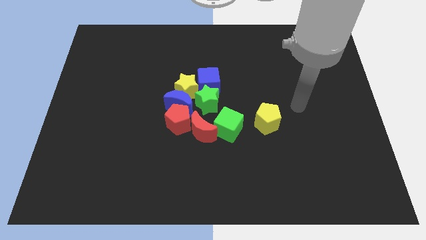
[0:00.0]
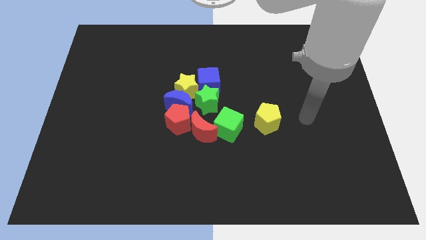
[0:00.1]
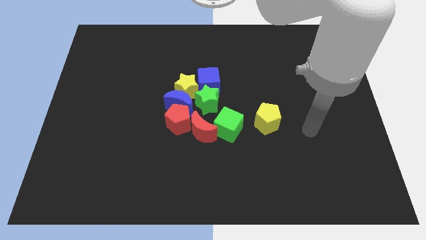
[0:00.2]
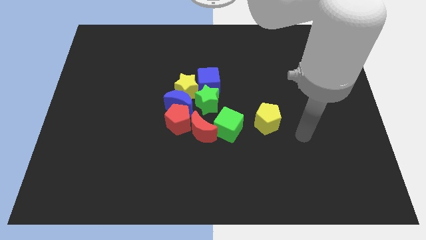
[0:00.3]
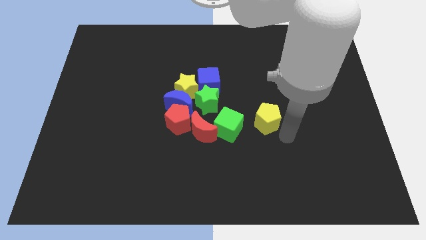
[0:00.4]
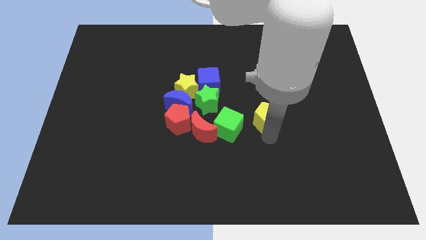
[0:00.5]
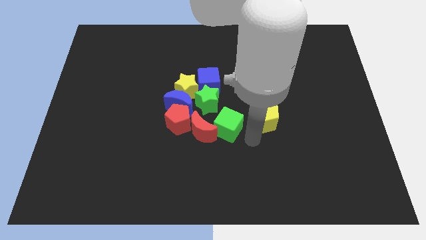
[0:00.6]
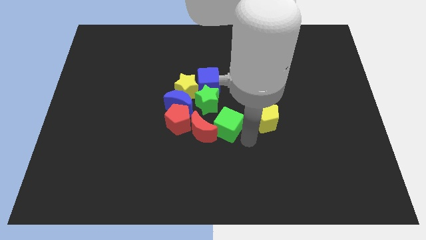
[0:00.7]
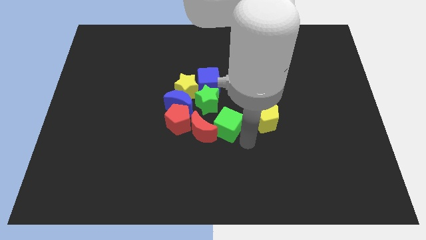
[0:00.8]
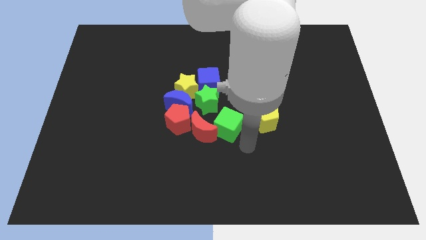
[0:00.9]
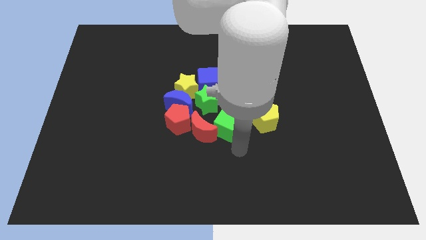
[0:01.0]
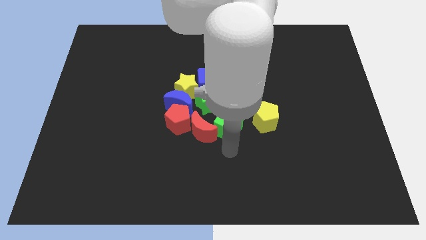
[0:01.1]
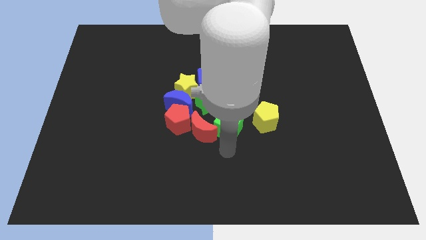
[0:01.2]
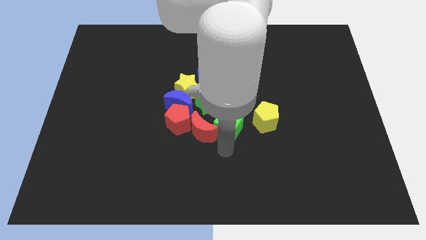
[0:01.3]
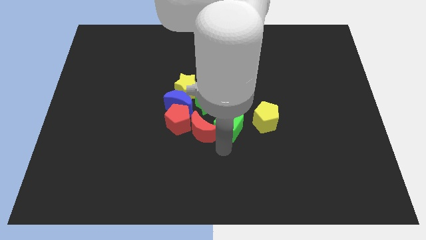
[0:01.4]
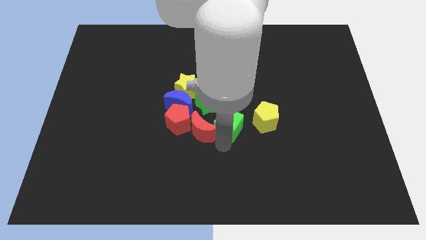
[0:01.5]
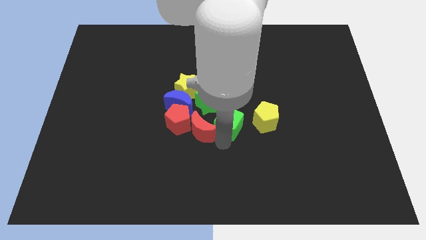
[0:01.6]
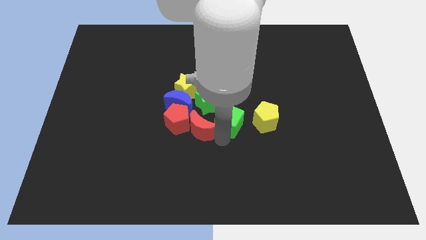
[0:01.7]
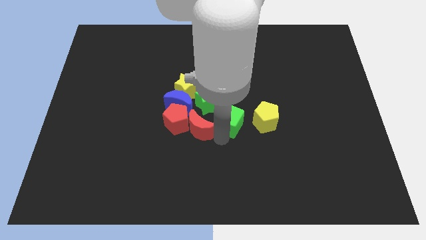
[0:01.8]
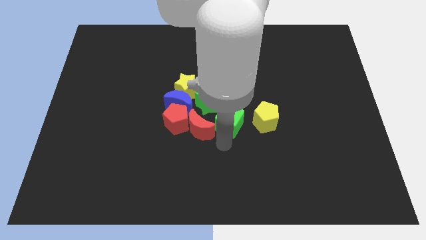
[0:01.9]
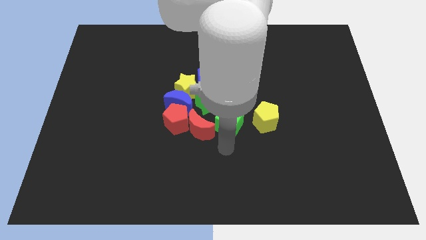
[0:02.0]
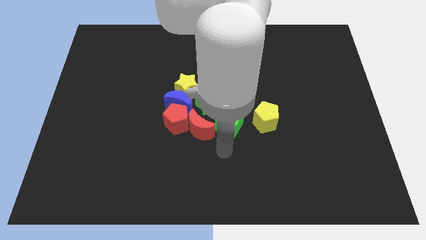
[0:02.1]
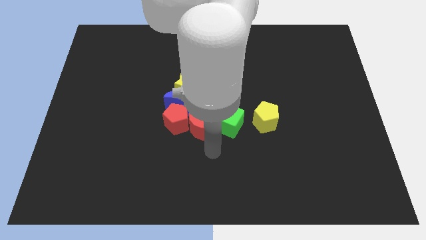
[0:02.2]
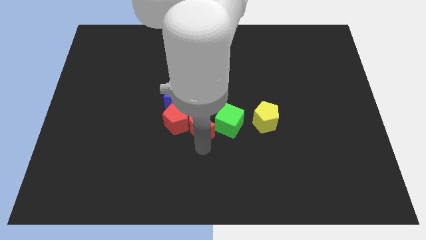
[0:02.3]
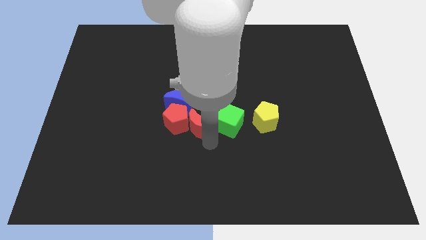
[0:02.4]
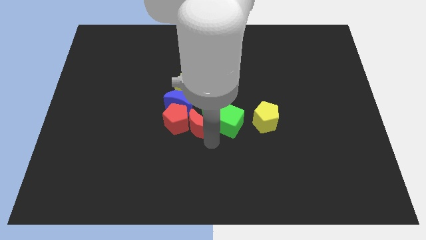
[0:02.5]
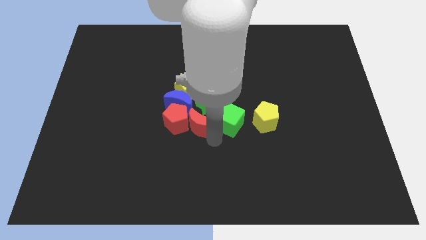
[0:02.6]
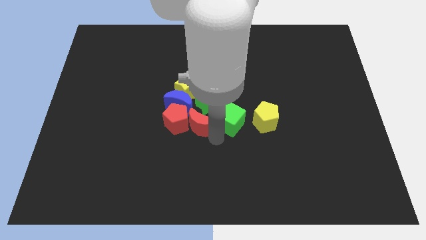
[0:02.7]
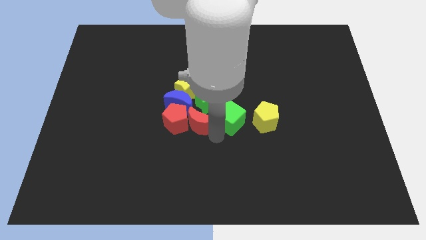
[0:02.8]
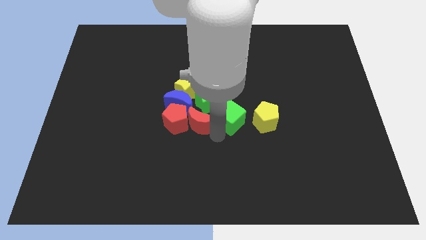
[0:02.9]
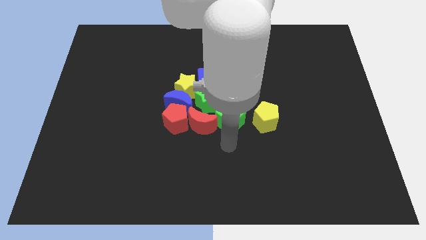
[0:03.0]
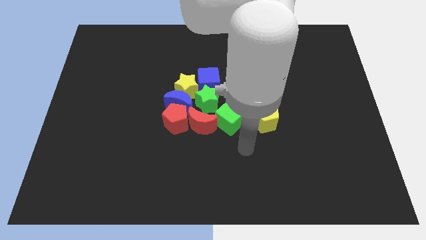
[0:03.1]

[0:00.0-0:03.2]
move your arm away from the yellow pentagon

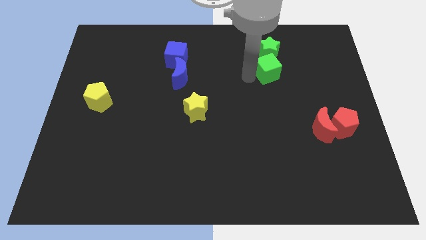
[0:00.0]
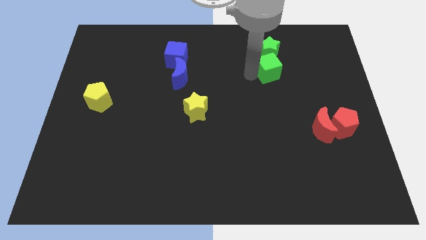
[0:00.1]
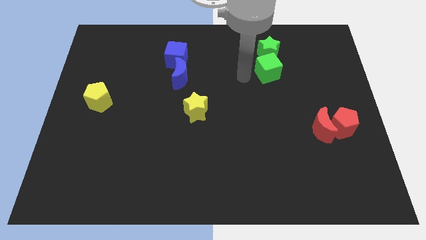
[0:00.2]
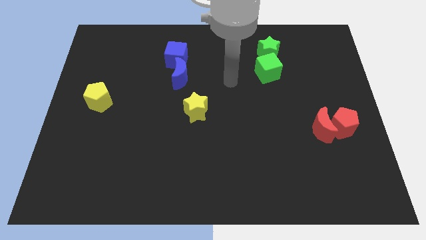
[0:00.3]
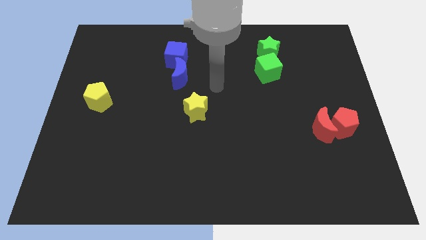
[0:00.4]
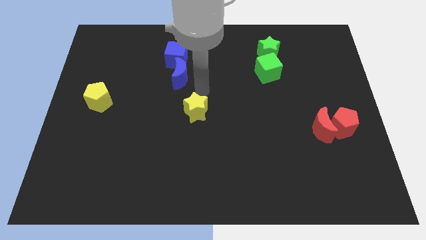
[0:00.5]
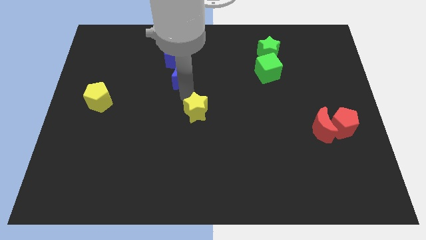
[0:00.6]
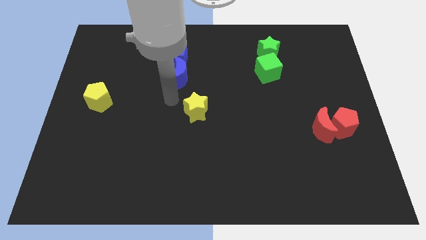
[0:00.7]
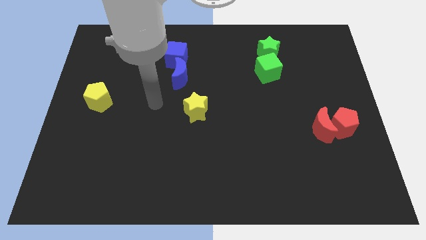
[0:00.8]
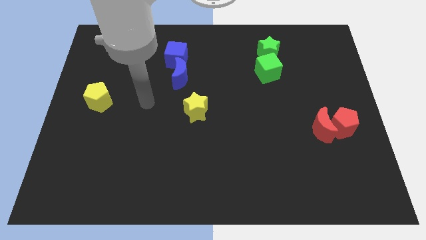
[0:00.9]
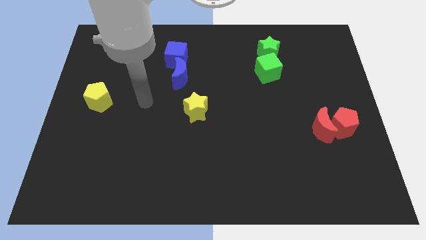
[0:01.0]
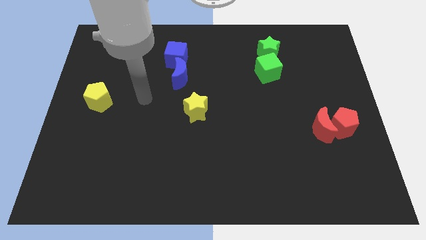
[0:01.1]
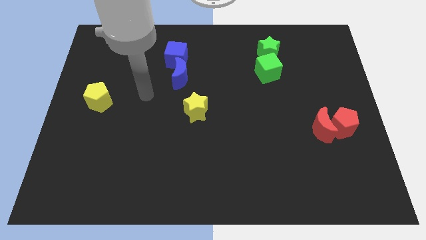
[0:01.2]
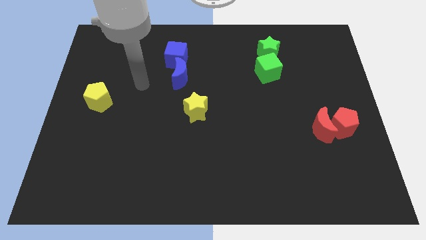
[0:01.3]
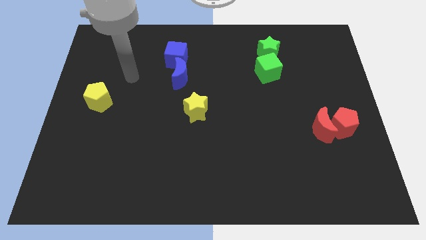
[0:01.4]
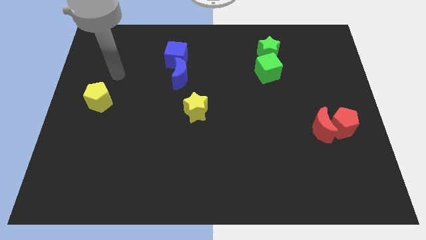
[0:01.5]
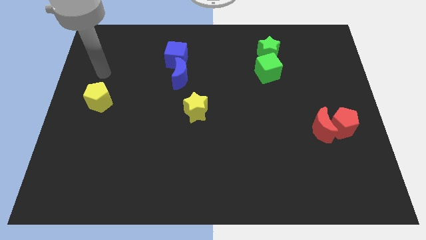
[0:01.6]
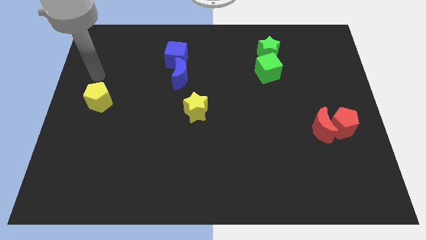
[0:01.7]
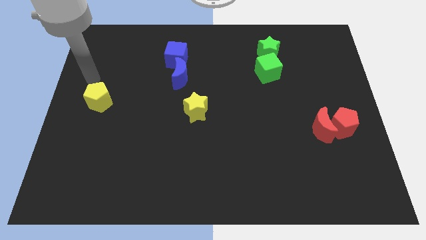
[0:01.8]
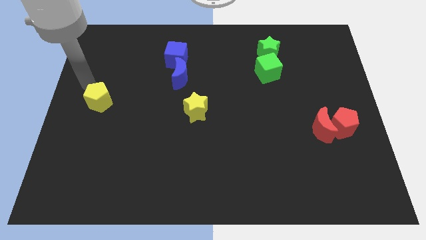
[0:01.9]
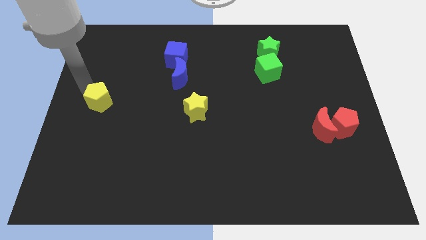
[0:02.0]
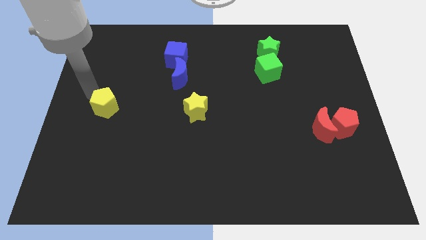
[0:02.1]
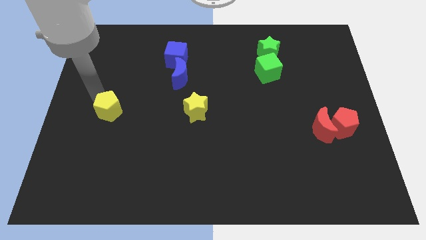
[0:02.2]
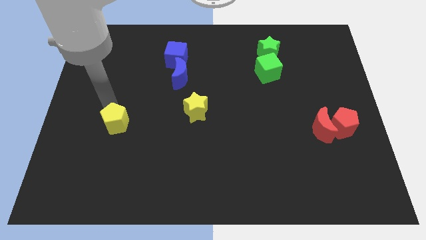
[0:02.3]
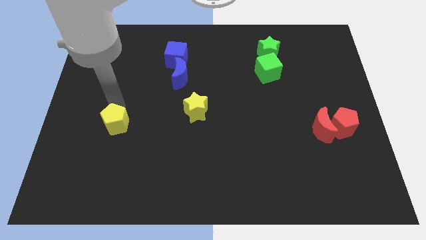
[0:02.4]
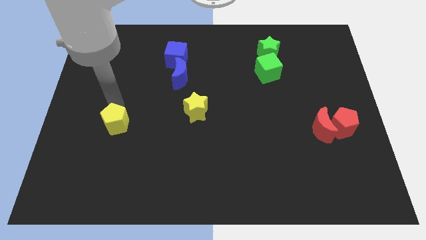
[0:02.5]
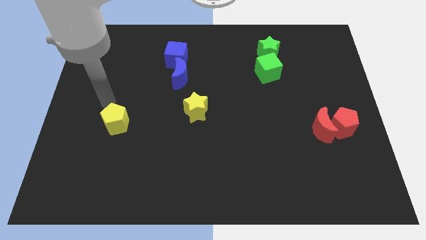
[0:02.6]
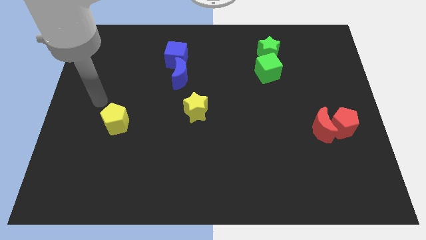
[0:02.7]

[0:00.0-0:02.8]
move the yellow pentagon to the left yellow star

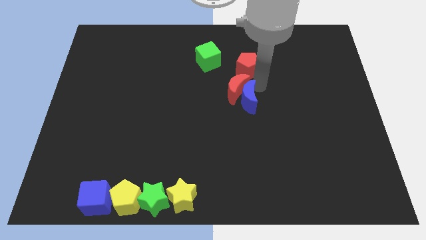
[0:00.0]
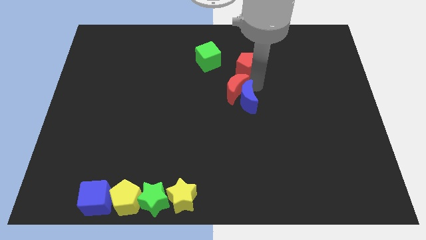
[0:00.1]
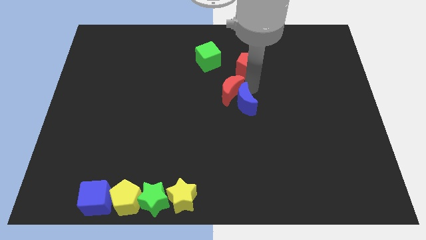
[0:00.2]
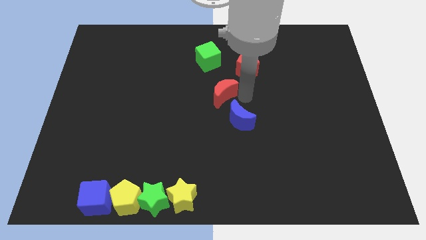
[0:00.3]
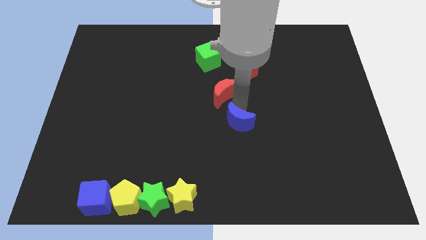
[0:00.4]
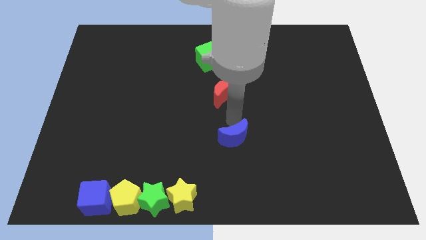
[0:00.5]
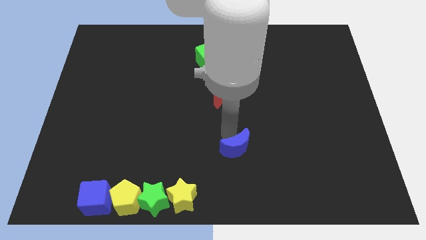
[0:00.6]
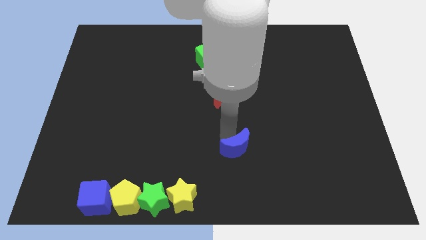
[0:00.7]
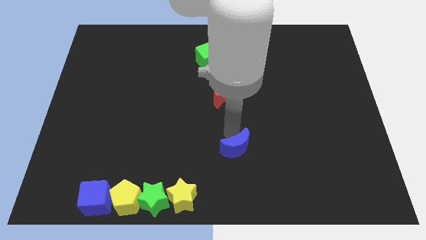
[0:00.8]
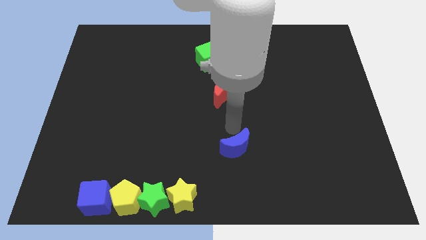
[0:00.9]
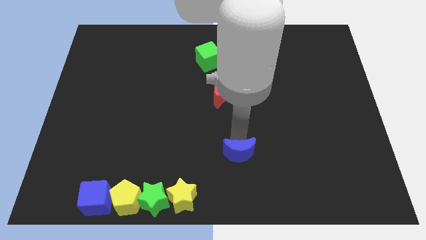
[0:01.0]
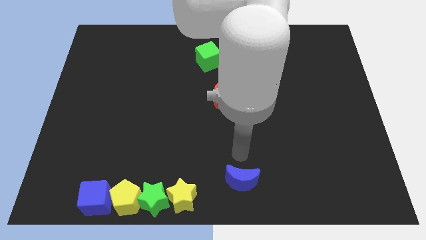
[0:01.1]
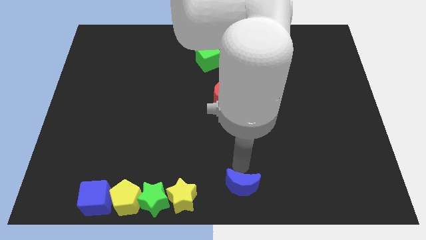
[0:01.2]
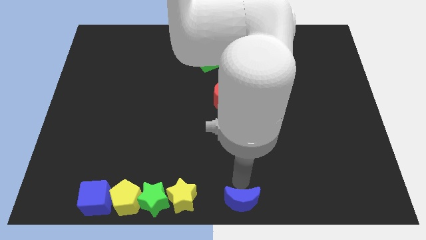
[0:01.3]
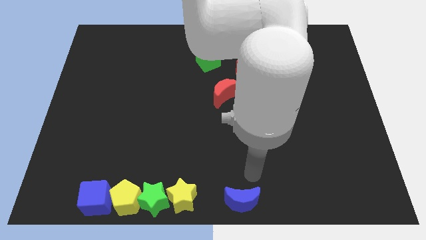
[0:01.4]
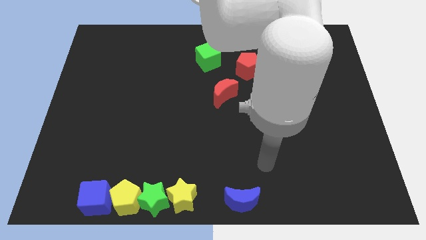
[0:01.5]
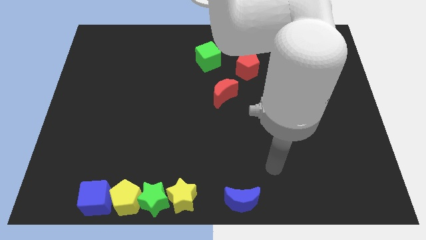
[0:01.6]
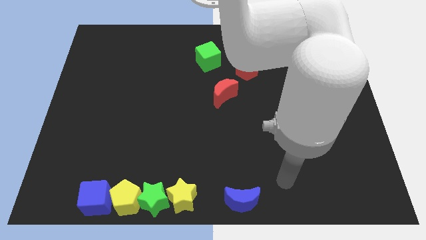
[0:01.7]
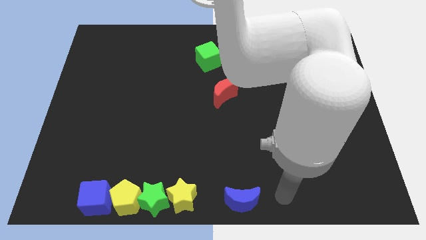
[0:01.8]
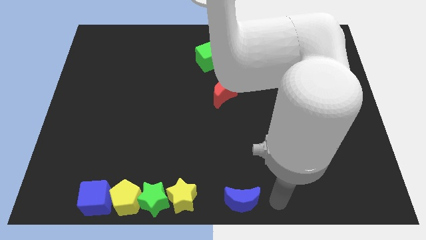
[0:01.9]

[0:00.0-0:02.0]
push the blue crescent to the bottom center of the board

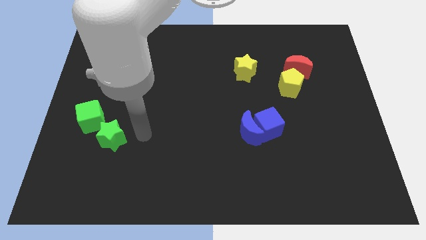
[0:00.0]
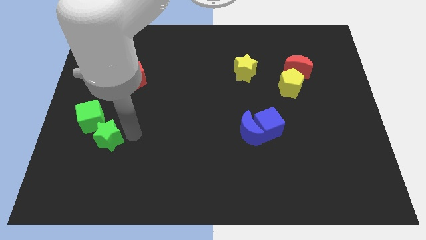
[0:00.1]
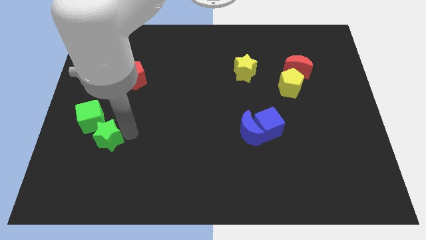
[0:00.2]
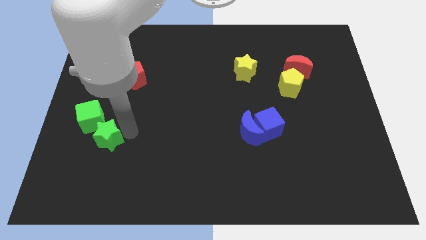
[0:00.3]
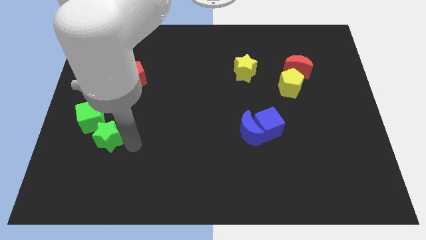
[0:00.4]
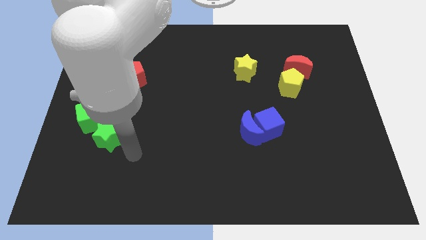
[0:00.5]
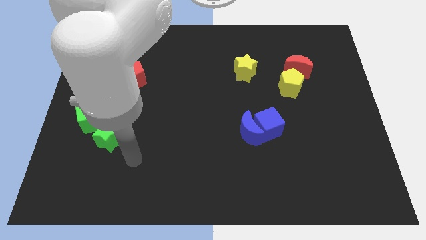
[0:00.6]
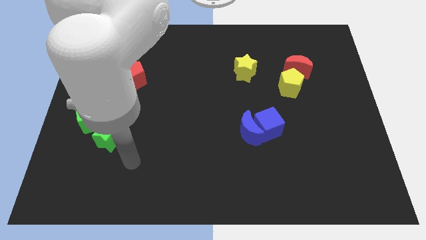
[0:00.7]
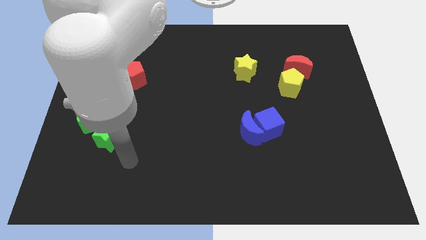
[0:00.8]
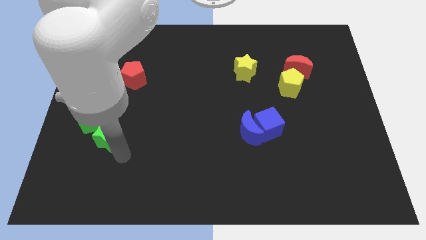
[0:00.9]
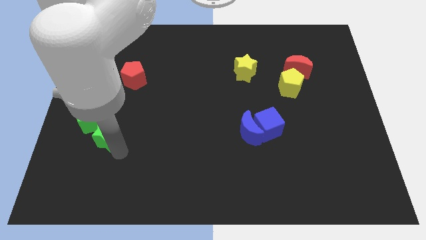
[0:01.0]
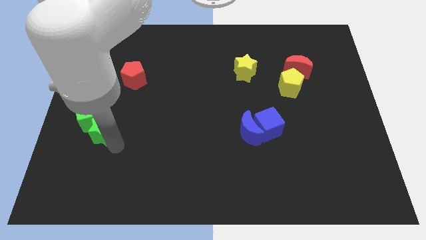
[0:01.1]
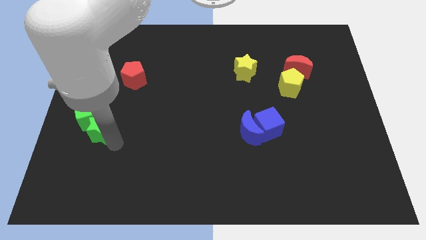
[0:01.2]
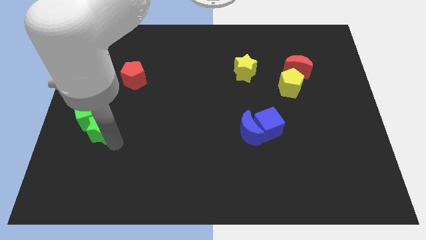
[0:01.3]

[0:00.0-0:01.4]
move the green star into the green cube
